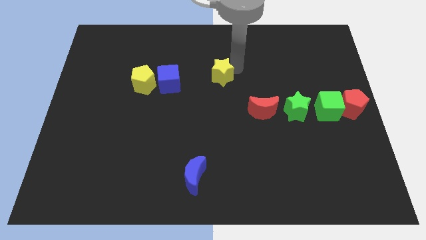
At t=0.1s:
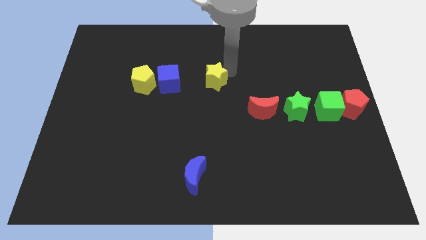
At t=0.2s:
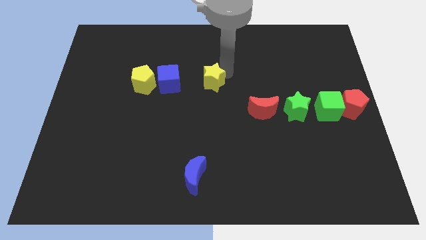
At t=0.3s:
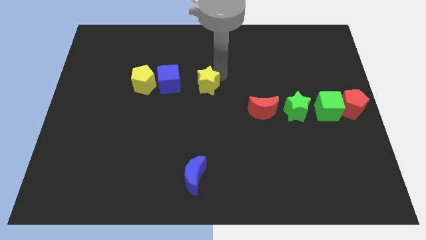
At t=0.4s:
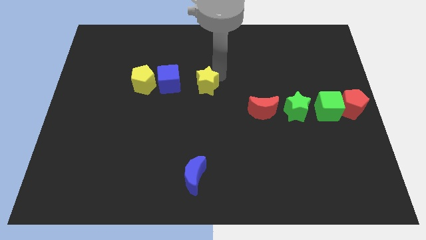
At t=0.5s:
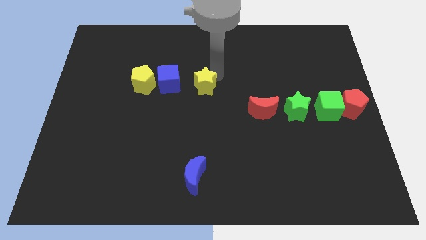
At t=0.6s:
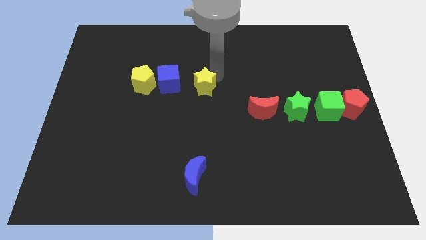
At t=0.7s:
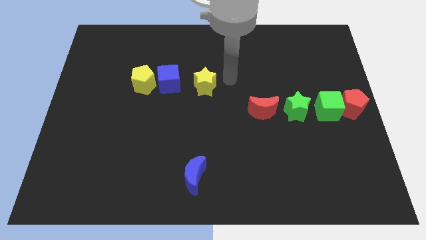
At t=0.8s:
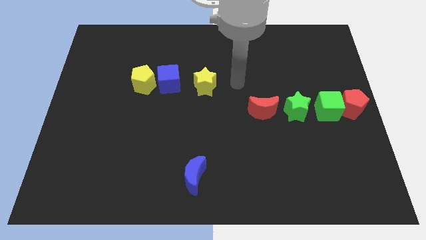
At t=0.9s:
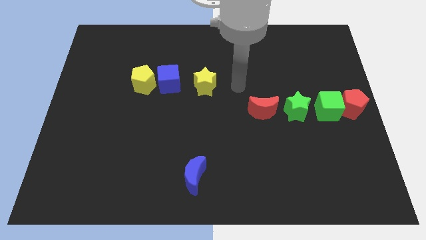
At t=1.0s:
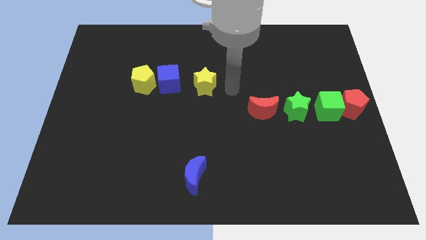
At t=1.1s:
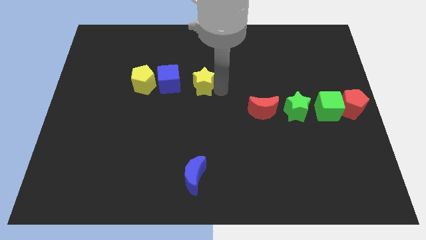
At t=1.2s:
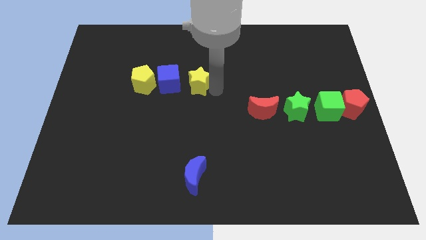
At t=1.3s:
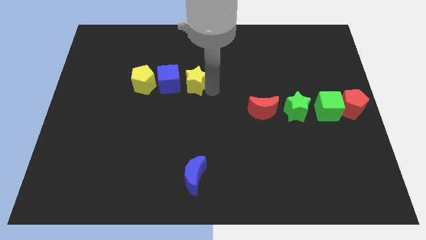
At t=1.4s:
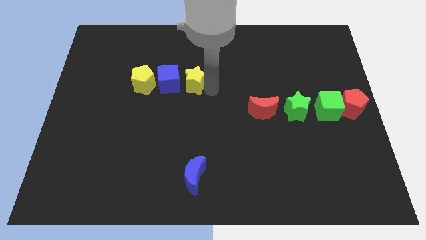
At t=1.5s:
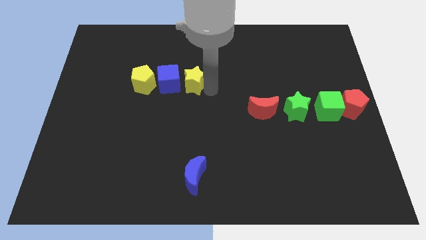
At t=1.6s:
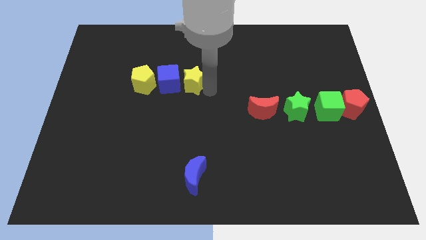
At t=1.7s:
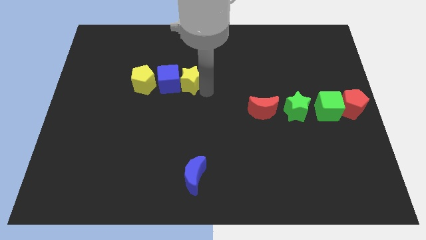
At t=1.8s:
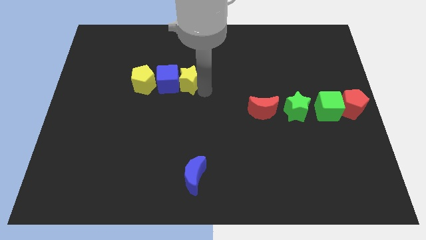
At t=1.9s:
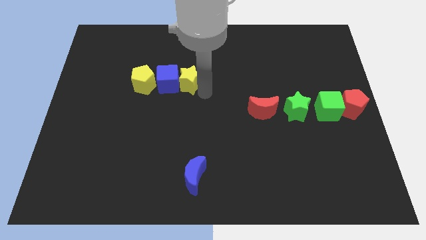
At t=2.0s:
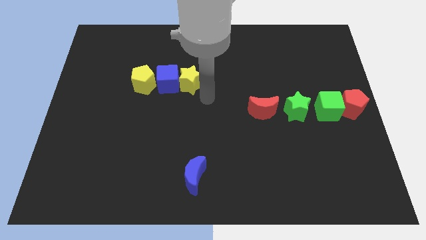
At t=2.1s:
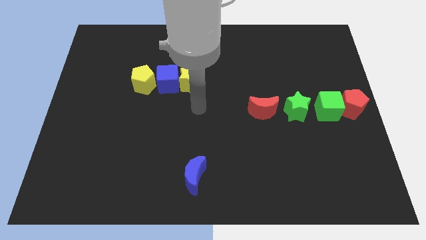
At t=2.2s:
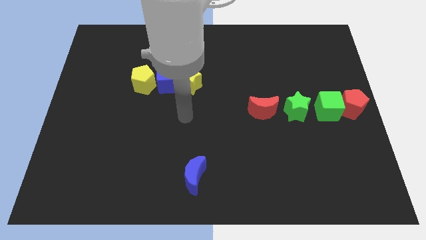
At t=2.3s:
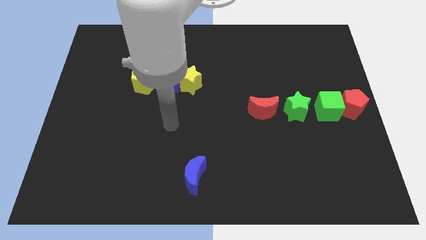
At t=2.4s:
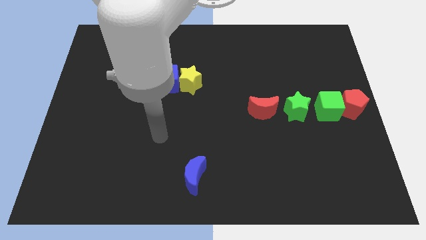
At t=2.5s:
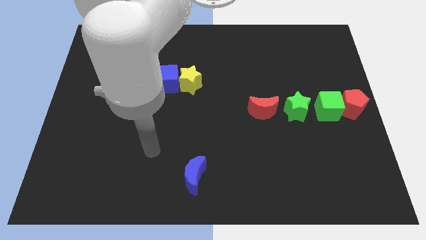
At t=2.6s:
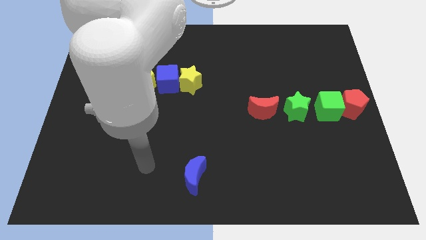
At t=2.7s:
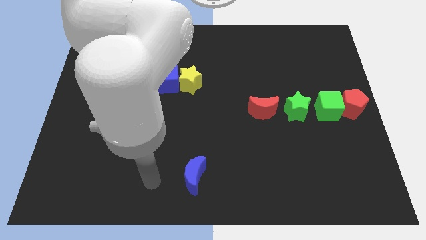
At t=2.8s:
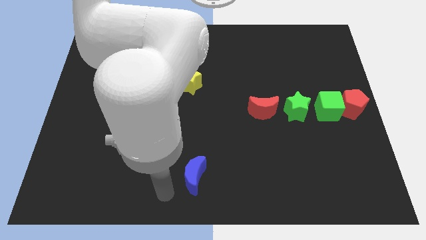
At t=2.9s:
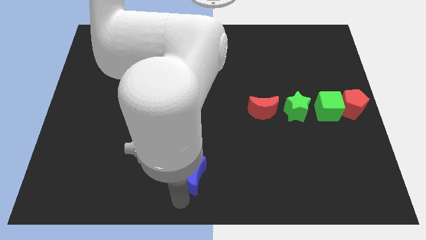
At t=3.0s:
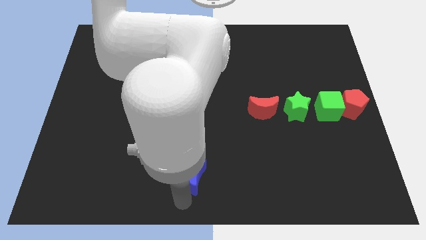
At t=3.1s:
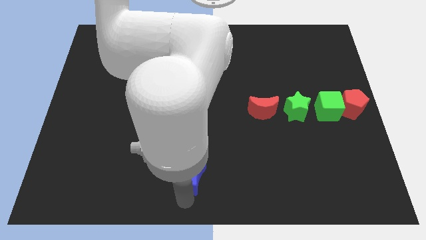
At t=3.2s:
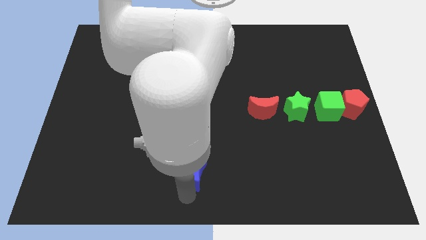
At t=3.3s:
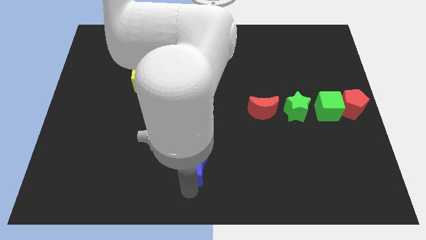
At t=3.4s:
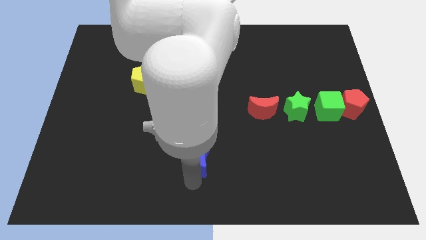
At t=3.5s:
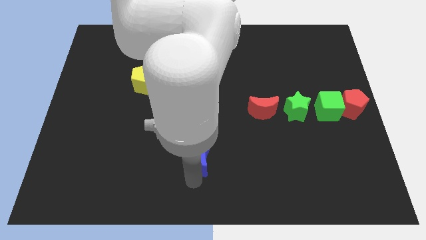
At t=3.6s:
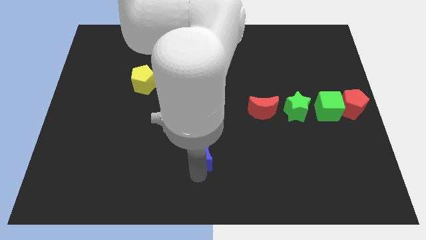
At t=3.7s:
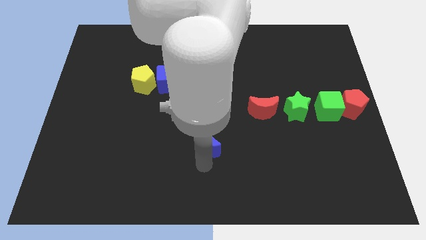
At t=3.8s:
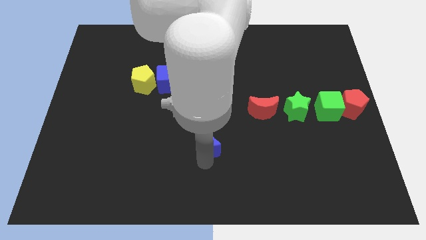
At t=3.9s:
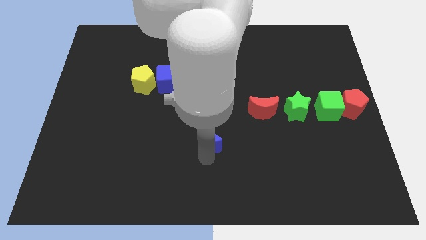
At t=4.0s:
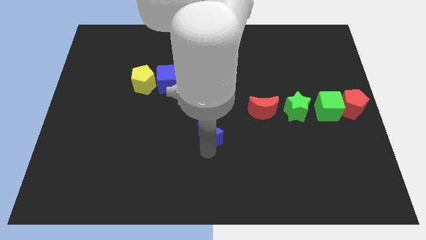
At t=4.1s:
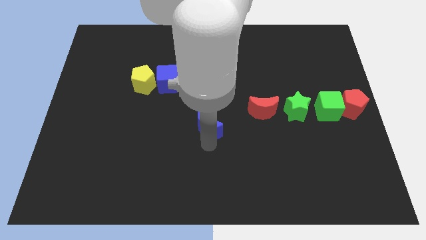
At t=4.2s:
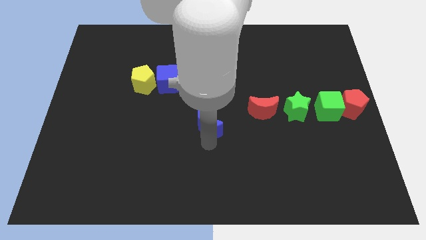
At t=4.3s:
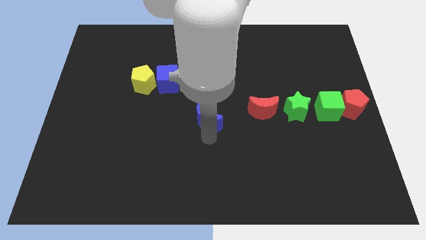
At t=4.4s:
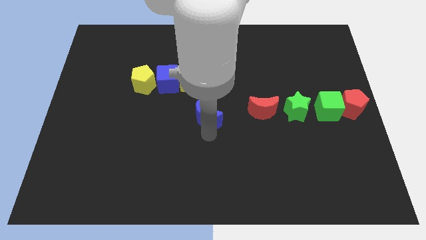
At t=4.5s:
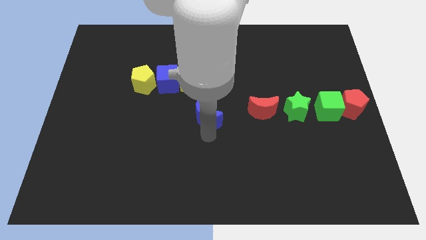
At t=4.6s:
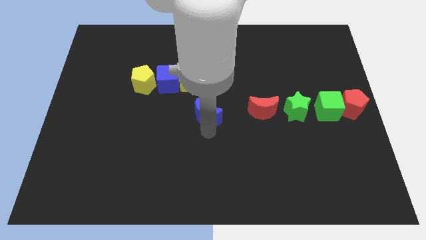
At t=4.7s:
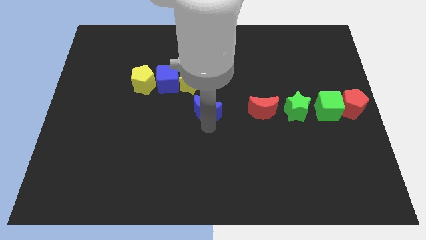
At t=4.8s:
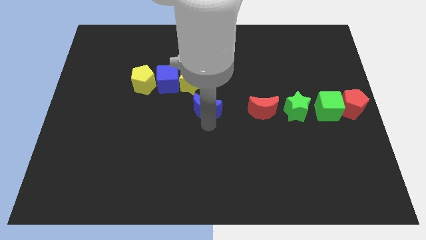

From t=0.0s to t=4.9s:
place the blue moon diagonally bottom right to the yellow star

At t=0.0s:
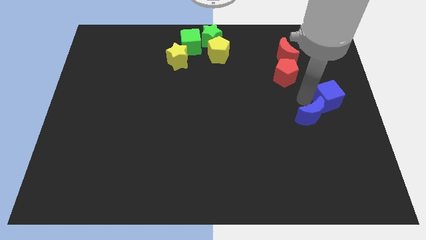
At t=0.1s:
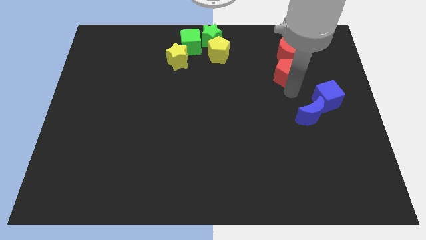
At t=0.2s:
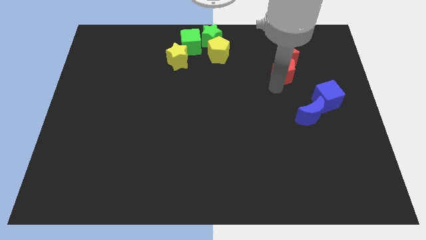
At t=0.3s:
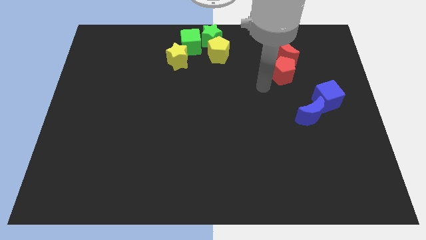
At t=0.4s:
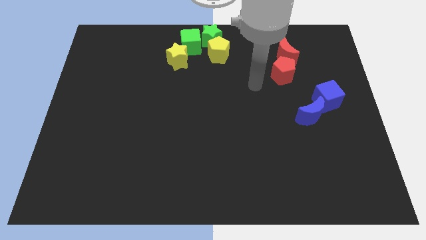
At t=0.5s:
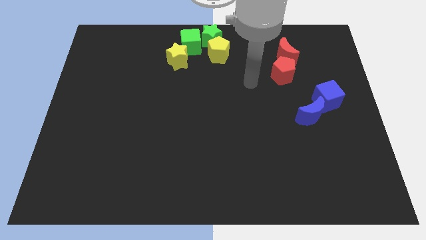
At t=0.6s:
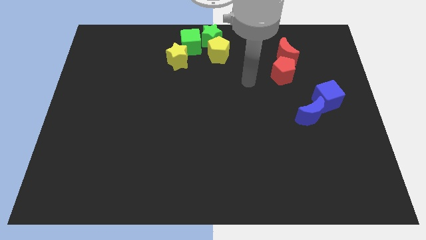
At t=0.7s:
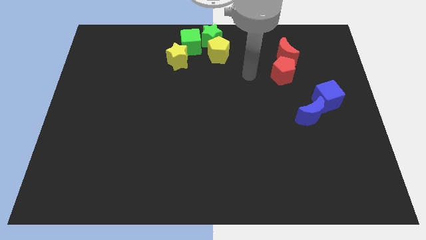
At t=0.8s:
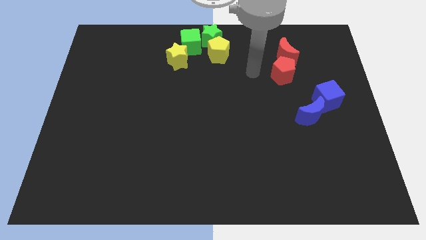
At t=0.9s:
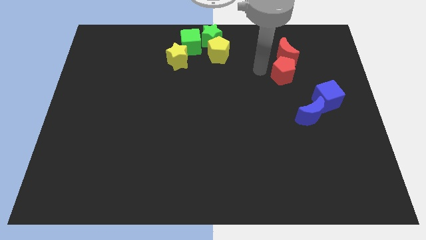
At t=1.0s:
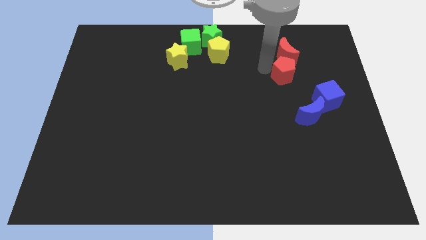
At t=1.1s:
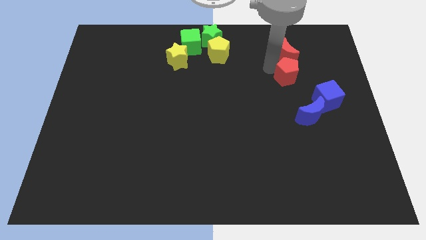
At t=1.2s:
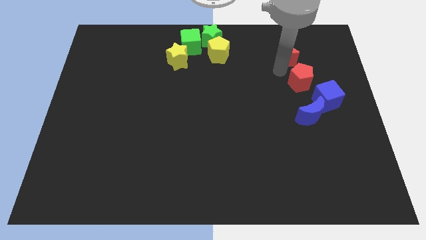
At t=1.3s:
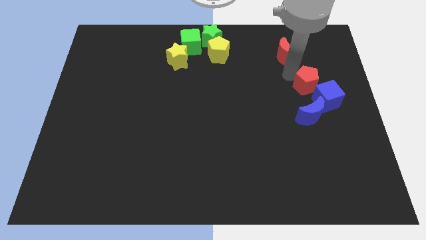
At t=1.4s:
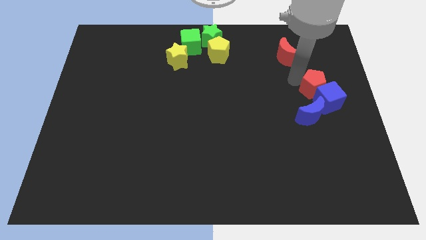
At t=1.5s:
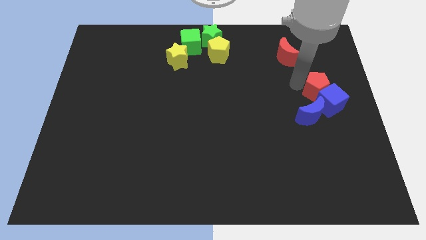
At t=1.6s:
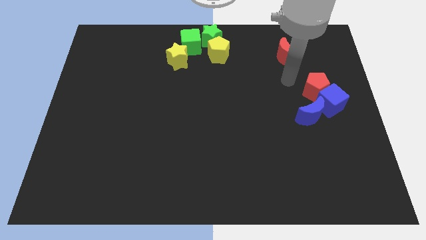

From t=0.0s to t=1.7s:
place the red pentagon diagonally bottom right to the red moon

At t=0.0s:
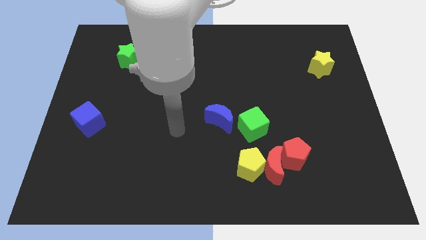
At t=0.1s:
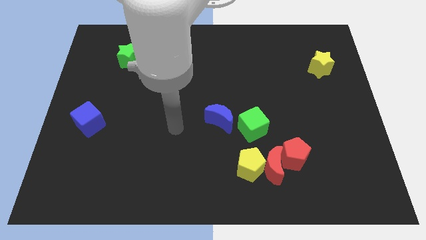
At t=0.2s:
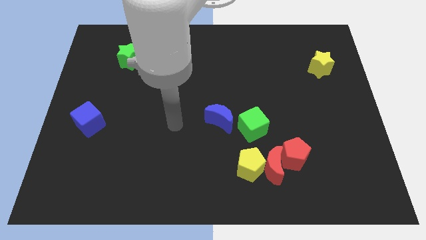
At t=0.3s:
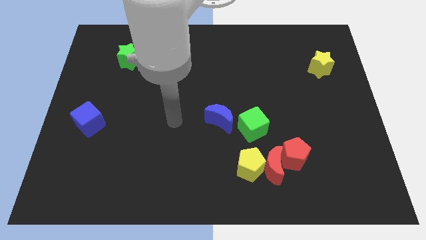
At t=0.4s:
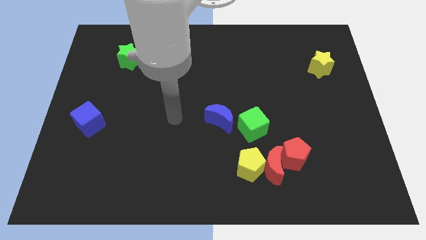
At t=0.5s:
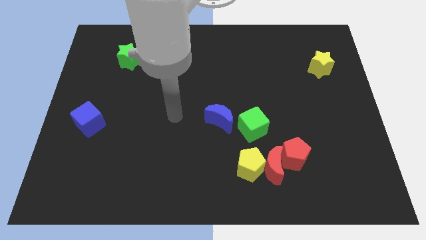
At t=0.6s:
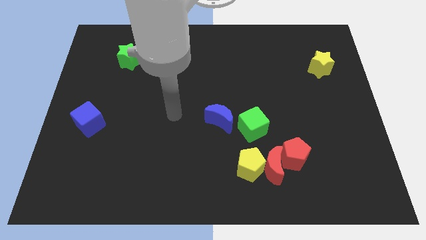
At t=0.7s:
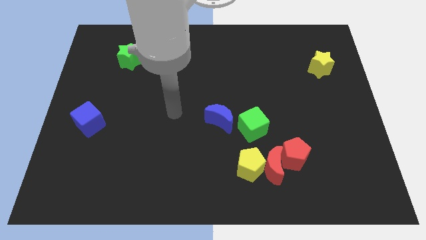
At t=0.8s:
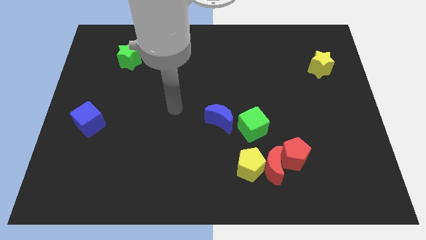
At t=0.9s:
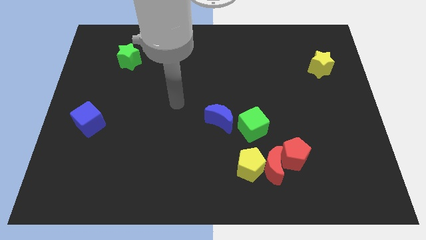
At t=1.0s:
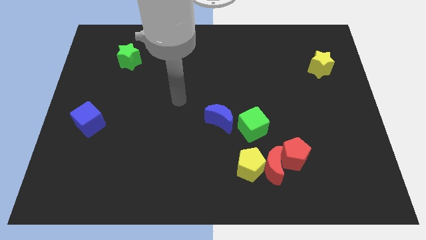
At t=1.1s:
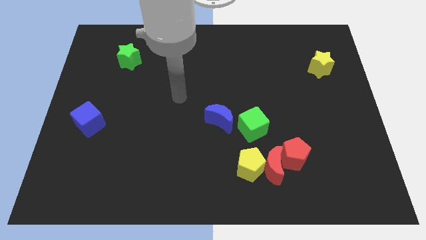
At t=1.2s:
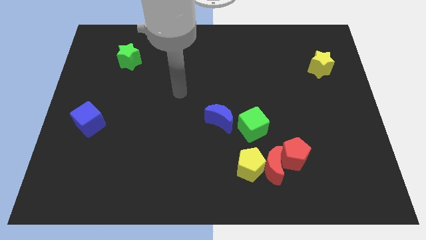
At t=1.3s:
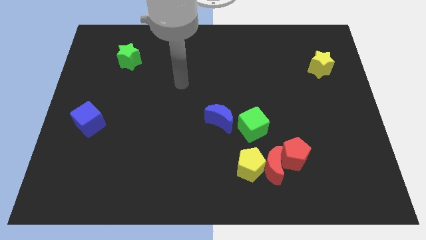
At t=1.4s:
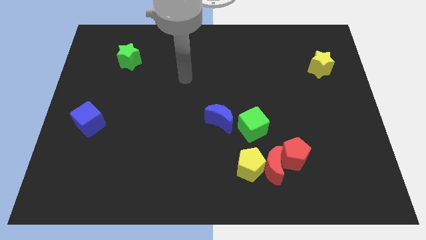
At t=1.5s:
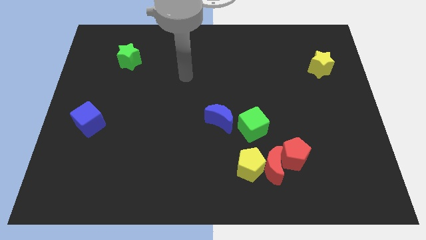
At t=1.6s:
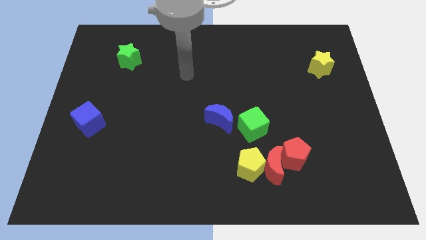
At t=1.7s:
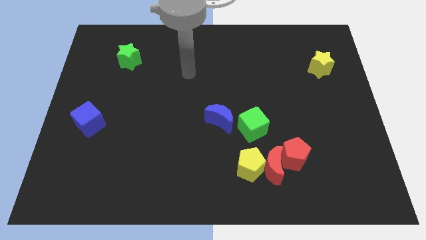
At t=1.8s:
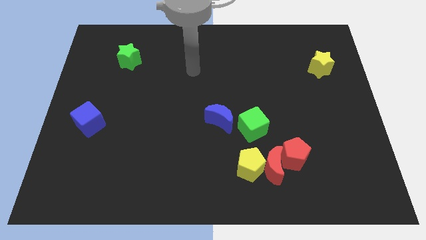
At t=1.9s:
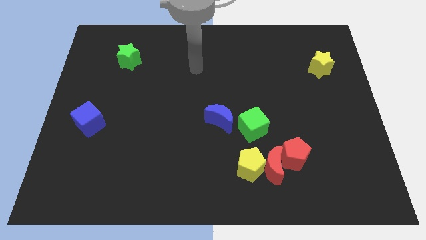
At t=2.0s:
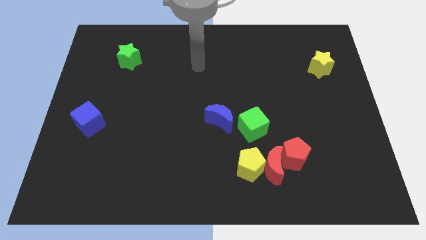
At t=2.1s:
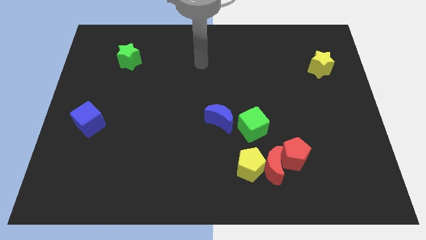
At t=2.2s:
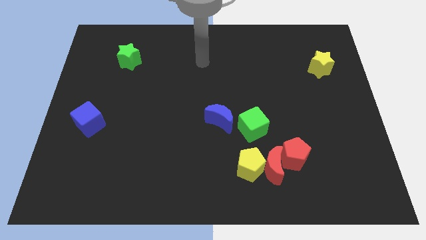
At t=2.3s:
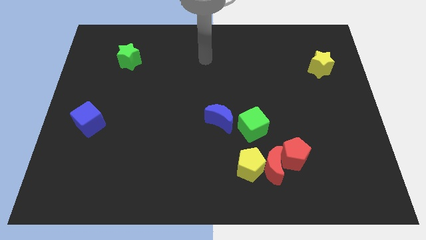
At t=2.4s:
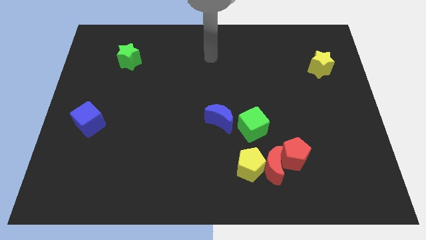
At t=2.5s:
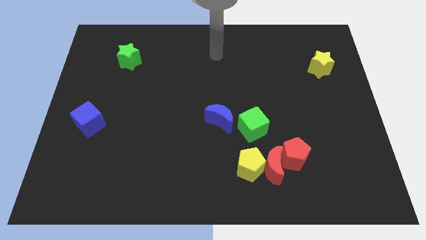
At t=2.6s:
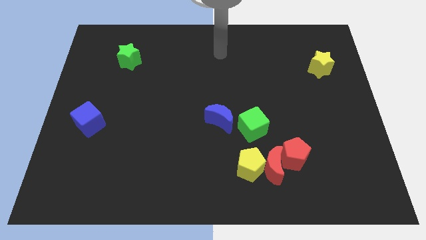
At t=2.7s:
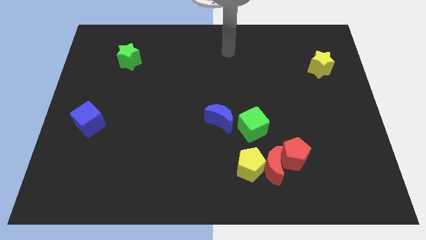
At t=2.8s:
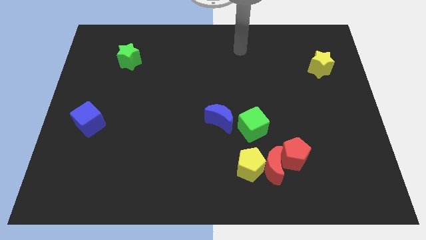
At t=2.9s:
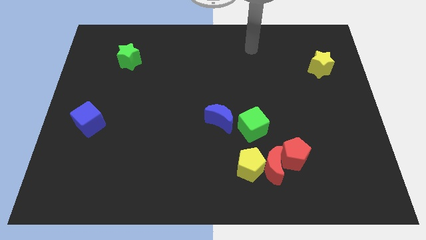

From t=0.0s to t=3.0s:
move the arm to the top
